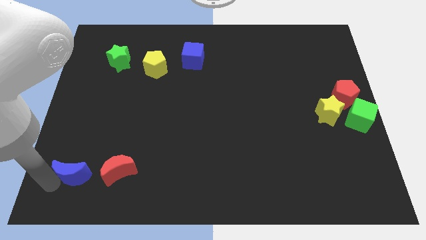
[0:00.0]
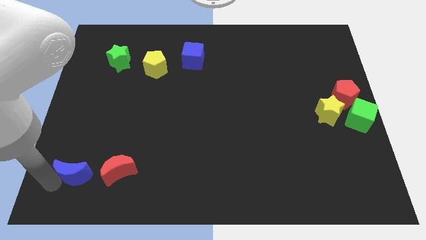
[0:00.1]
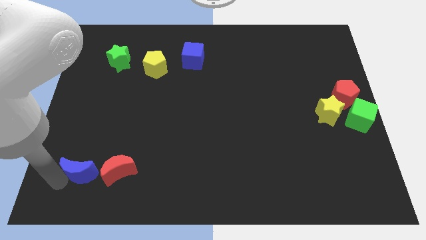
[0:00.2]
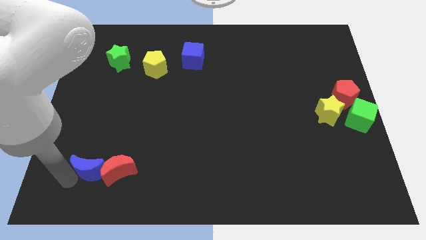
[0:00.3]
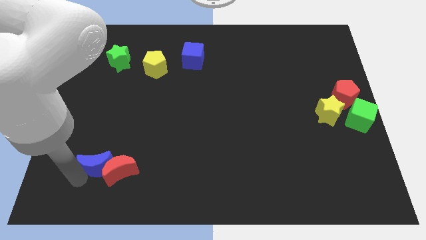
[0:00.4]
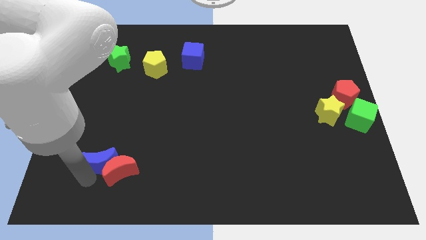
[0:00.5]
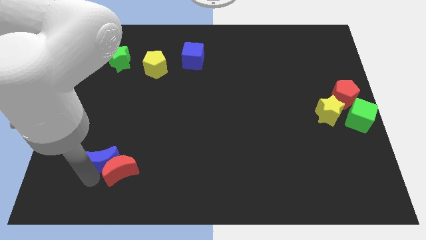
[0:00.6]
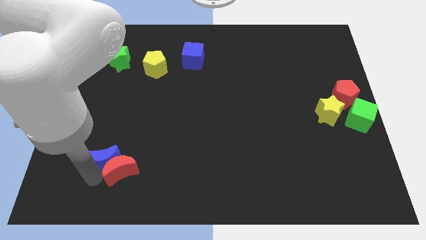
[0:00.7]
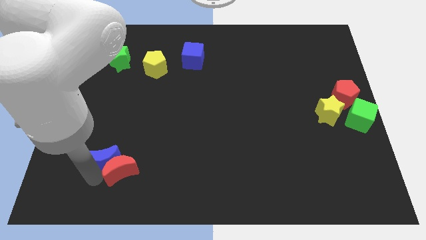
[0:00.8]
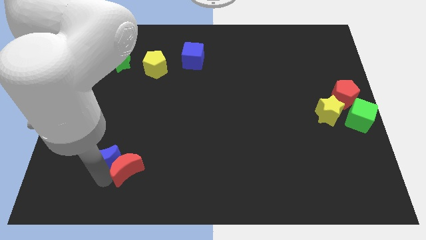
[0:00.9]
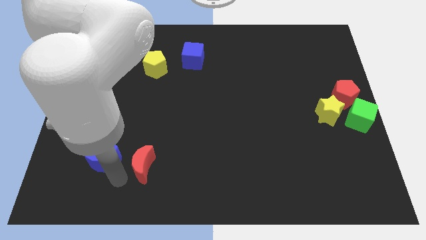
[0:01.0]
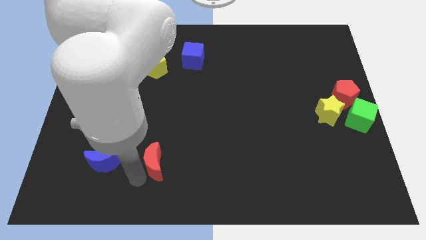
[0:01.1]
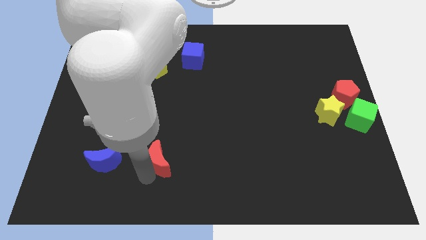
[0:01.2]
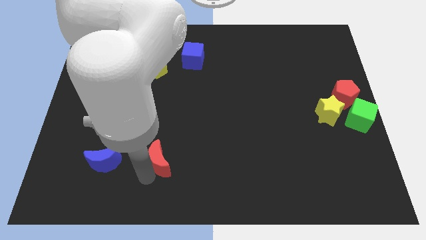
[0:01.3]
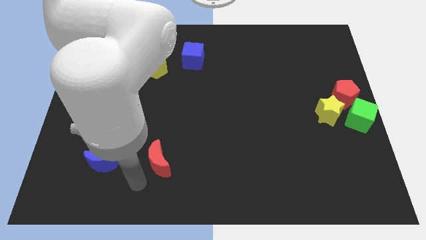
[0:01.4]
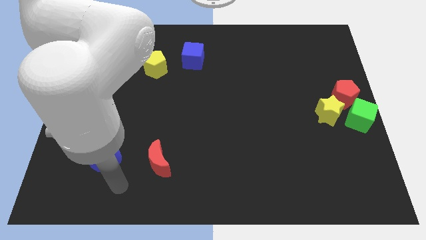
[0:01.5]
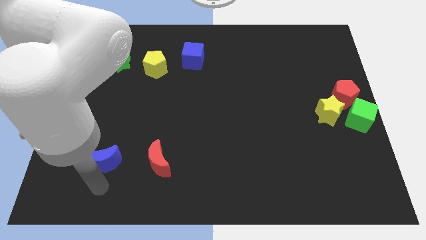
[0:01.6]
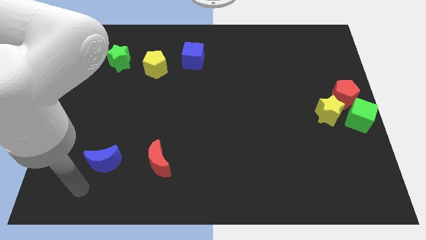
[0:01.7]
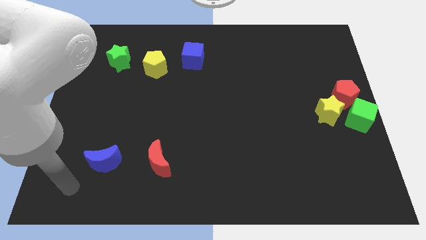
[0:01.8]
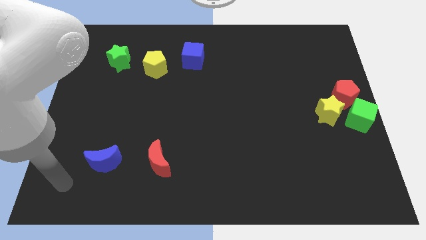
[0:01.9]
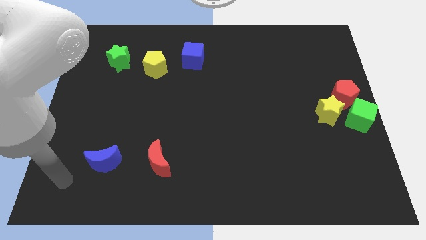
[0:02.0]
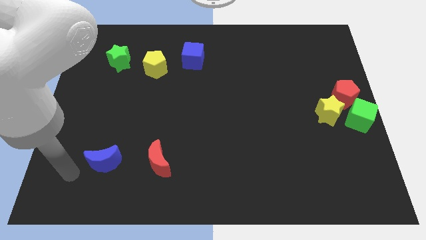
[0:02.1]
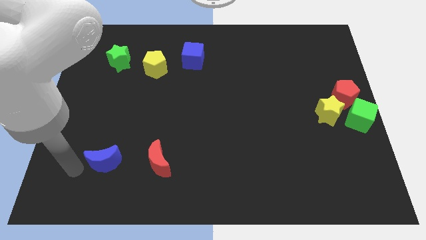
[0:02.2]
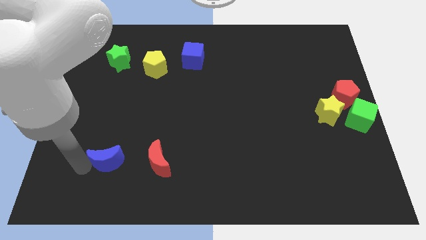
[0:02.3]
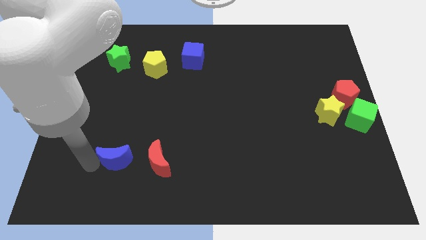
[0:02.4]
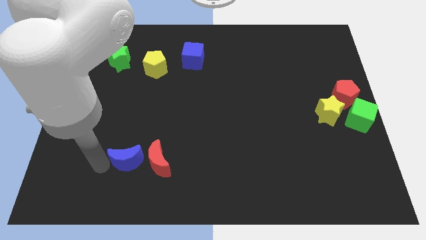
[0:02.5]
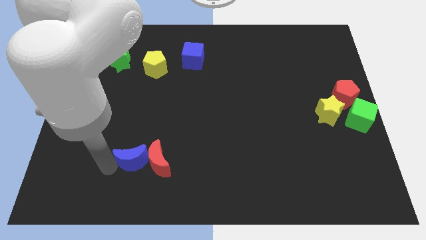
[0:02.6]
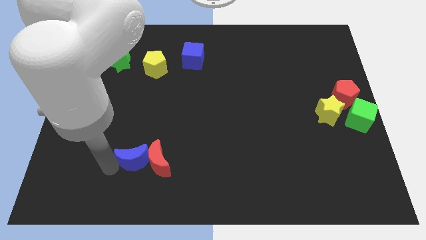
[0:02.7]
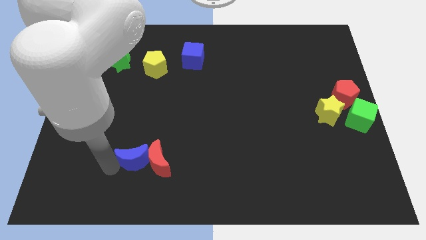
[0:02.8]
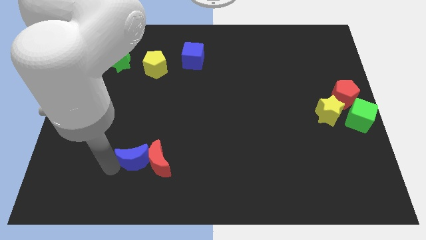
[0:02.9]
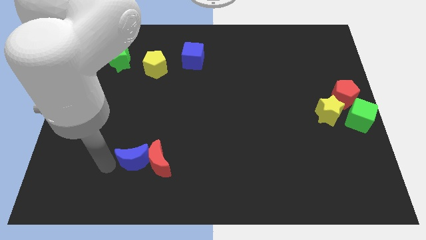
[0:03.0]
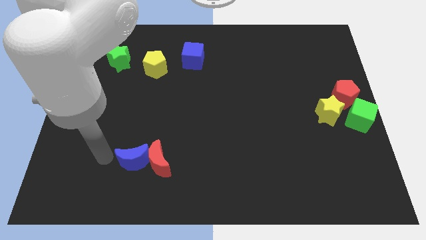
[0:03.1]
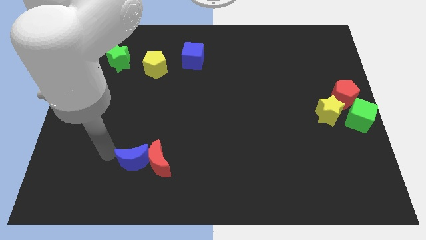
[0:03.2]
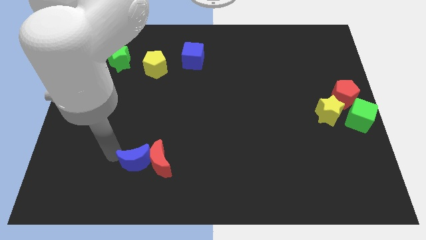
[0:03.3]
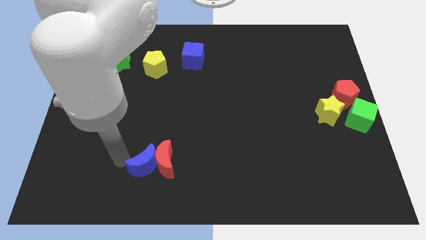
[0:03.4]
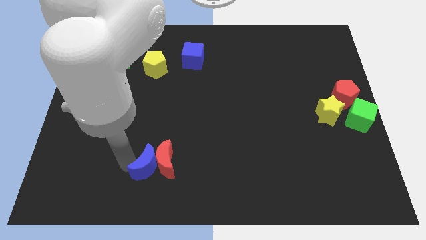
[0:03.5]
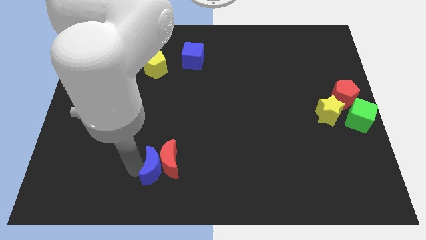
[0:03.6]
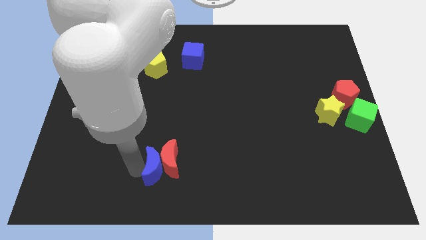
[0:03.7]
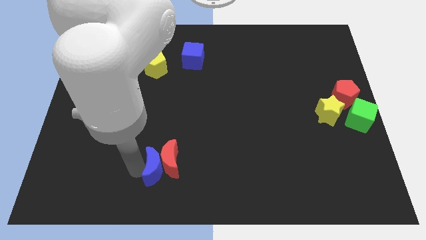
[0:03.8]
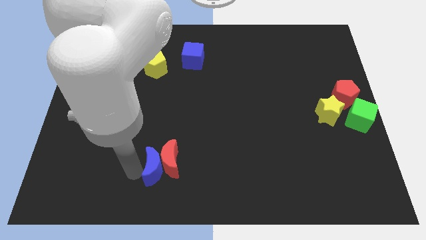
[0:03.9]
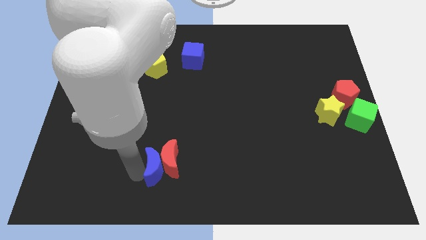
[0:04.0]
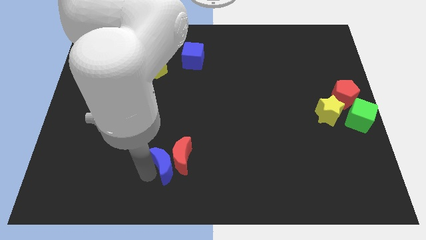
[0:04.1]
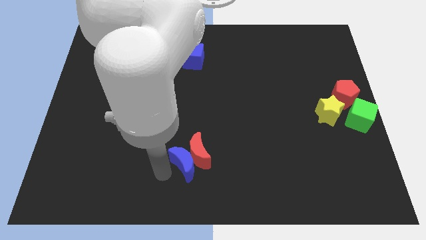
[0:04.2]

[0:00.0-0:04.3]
push the blue crescent into the red crescent

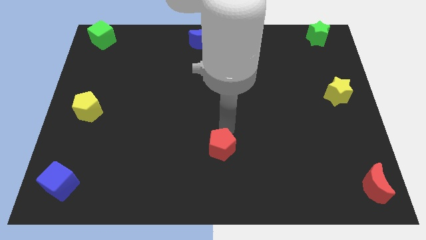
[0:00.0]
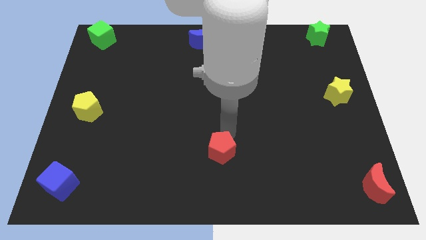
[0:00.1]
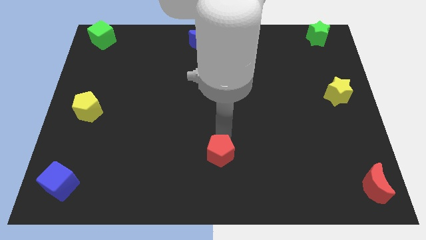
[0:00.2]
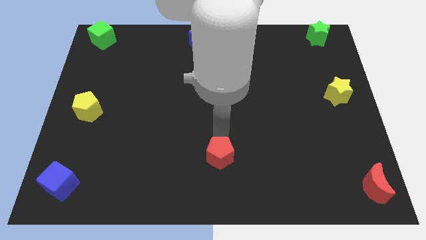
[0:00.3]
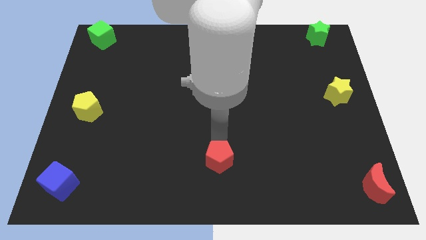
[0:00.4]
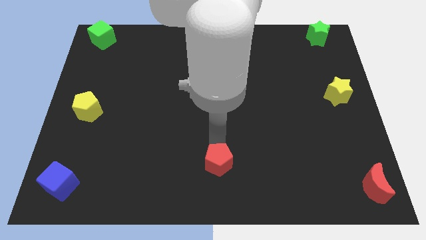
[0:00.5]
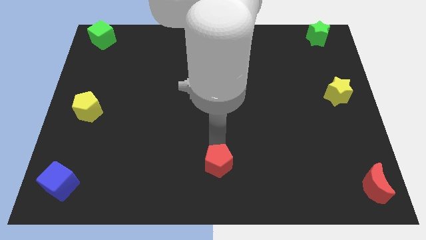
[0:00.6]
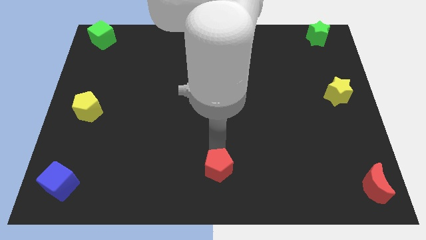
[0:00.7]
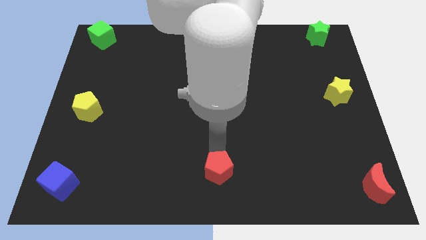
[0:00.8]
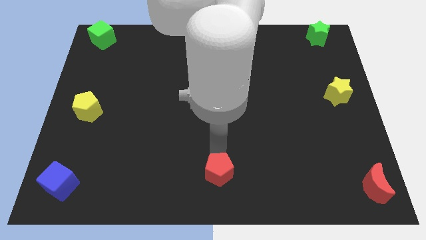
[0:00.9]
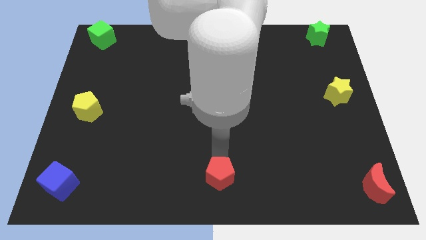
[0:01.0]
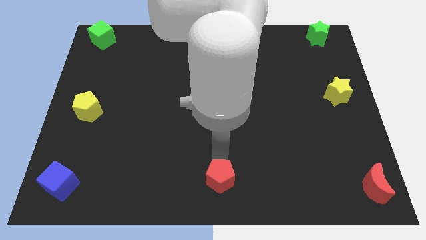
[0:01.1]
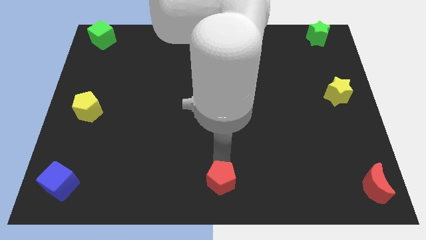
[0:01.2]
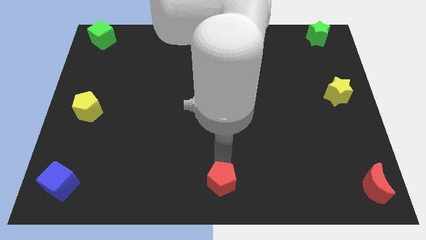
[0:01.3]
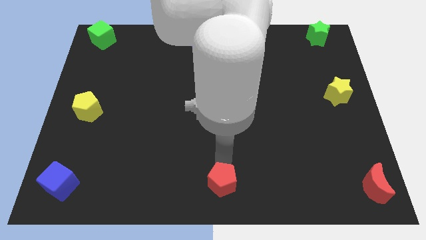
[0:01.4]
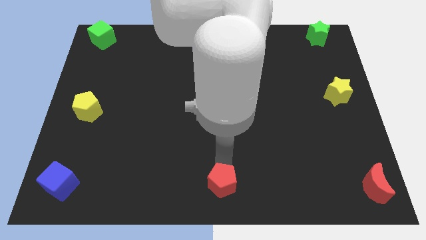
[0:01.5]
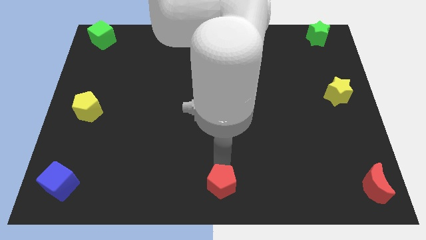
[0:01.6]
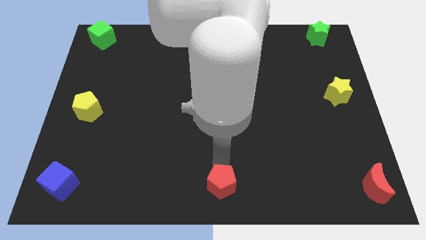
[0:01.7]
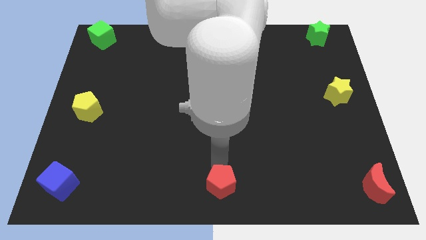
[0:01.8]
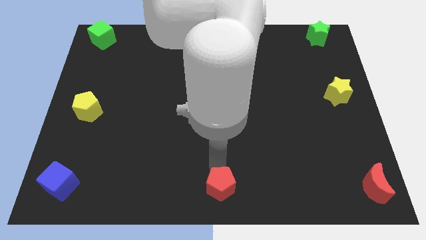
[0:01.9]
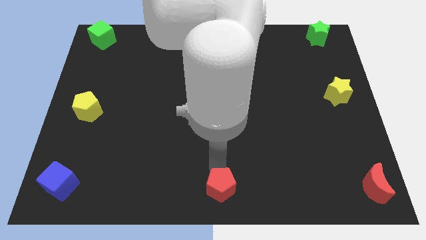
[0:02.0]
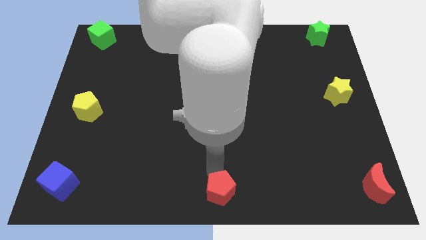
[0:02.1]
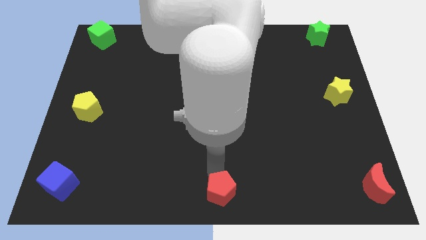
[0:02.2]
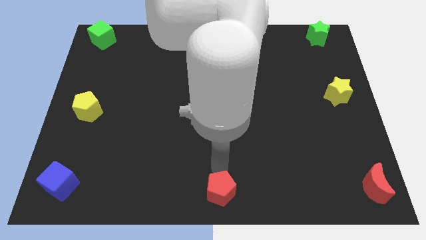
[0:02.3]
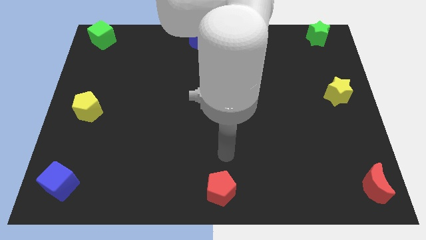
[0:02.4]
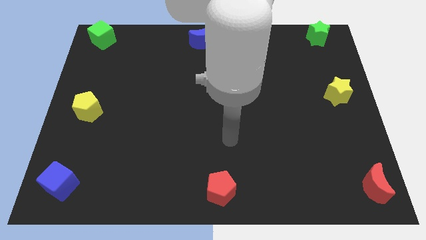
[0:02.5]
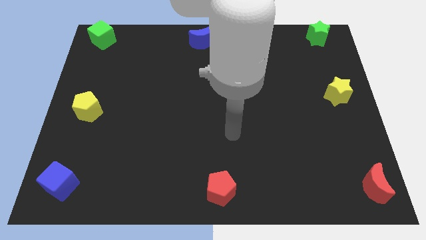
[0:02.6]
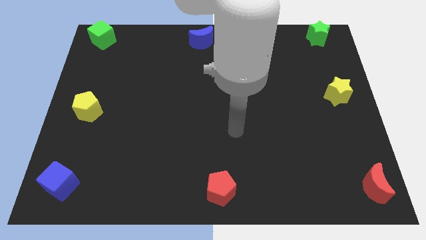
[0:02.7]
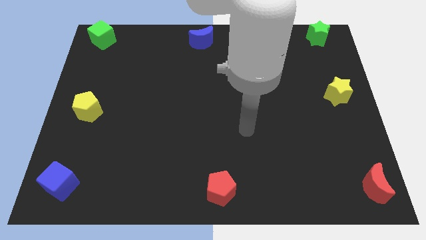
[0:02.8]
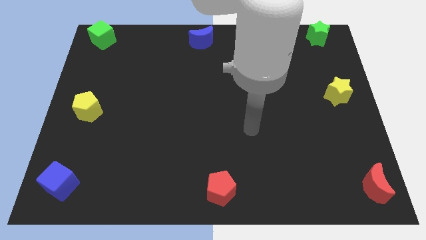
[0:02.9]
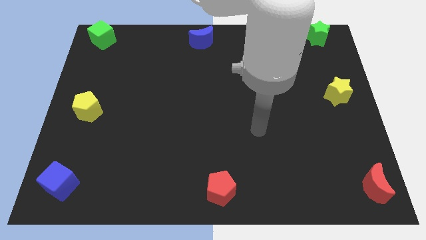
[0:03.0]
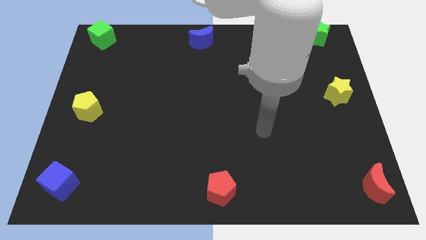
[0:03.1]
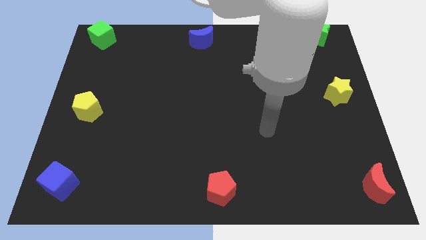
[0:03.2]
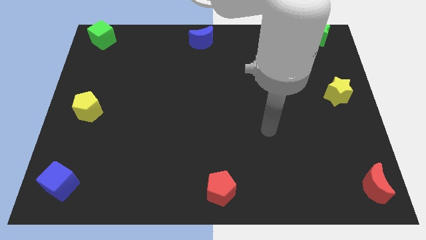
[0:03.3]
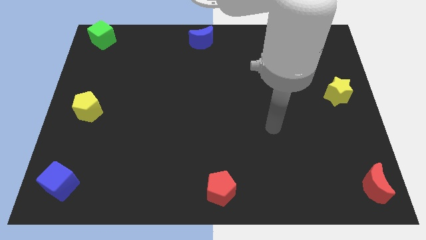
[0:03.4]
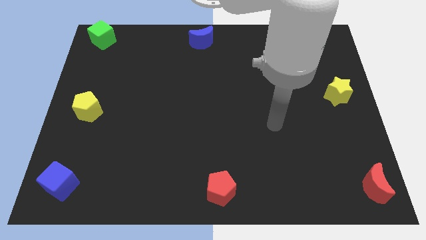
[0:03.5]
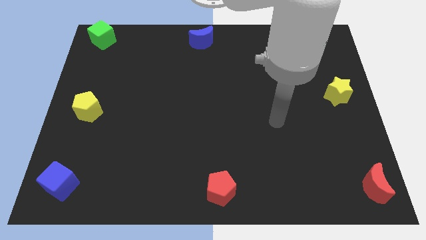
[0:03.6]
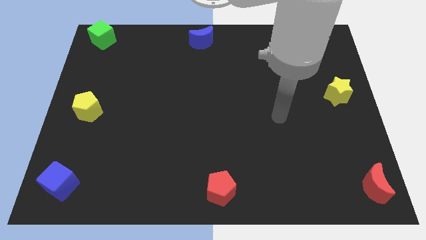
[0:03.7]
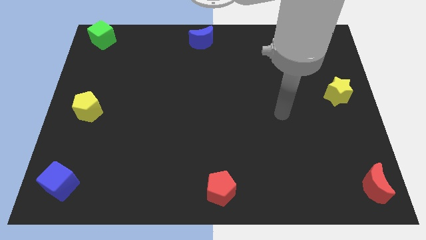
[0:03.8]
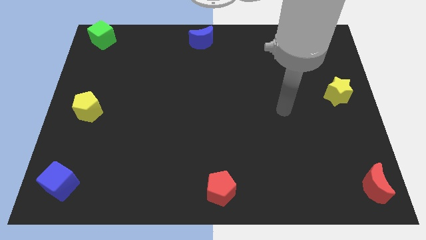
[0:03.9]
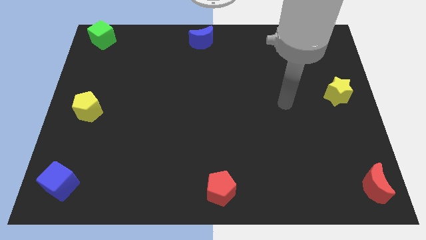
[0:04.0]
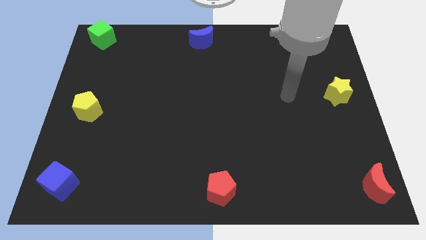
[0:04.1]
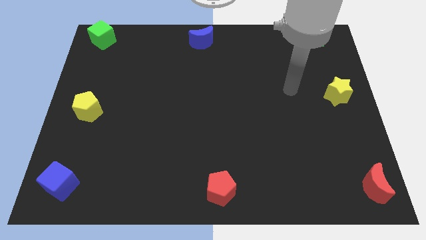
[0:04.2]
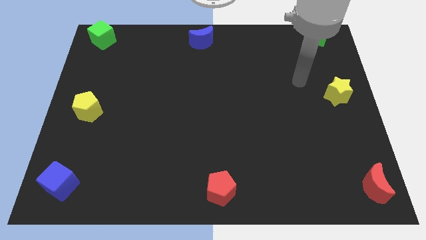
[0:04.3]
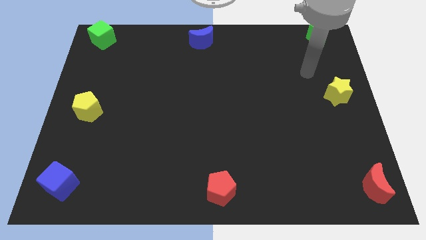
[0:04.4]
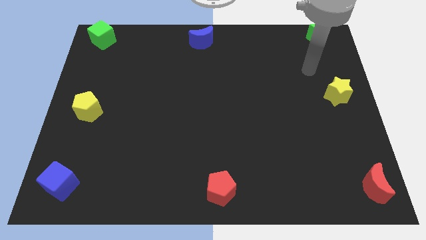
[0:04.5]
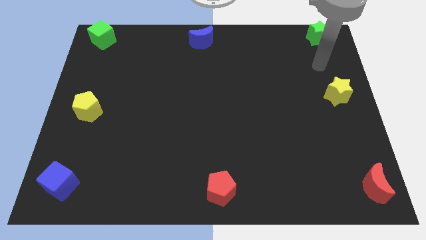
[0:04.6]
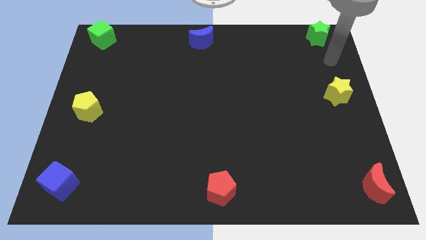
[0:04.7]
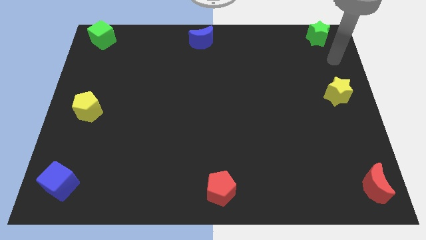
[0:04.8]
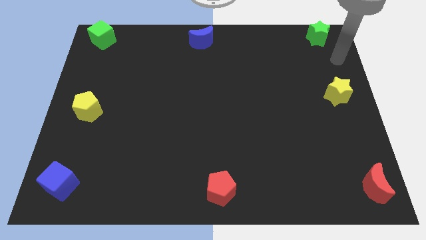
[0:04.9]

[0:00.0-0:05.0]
push the red pentagon towards the bottom center
